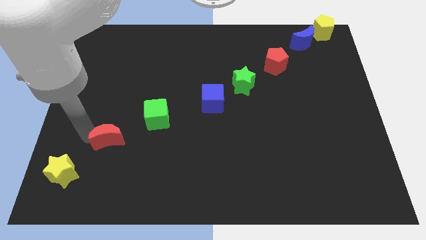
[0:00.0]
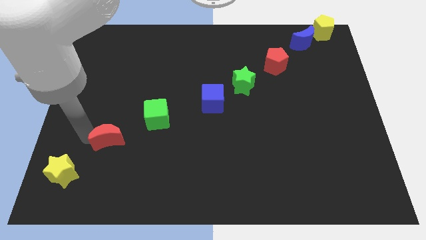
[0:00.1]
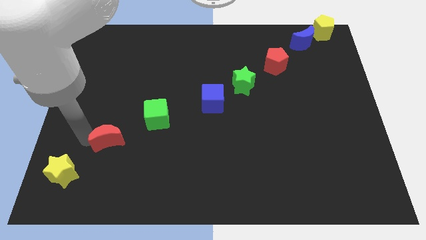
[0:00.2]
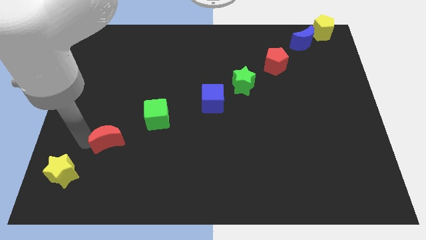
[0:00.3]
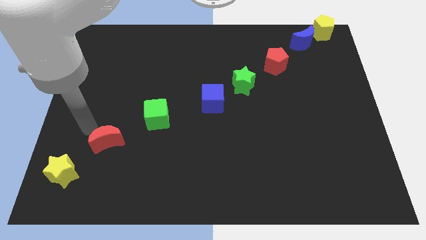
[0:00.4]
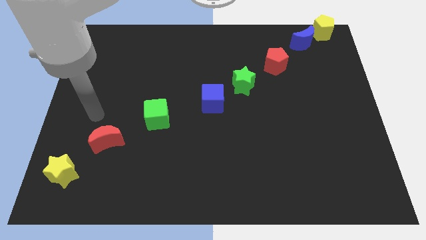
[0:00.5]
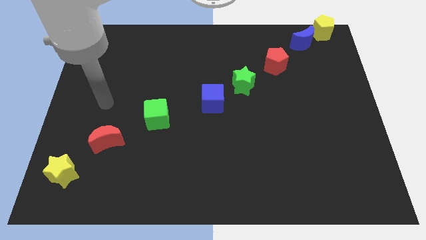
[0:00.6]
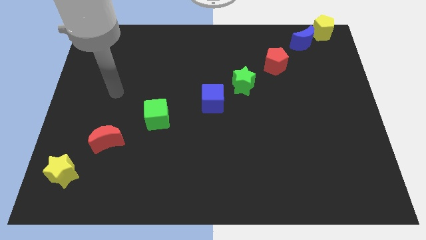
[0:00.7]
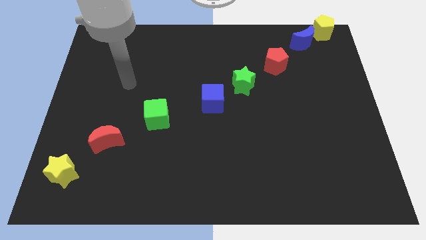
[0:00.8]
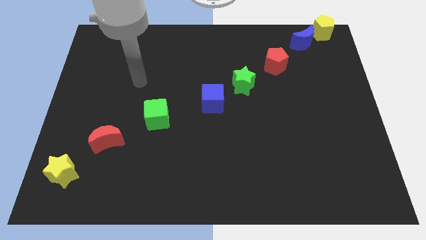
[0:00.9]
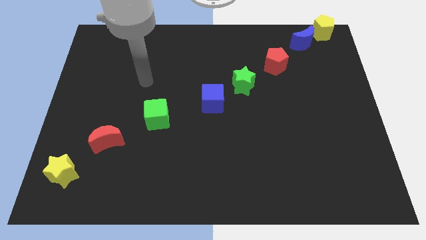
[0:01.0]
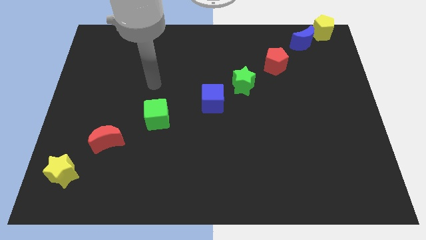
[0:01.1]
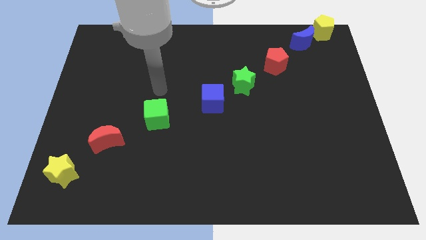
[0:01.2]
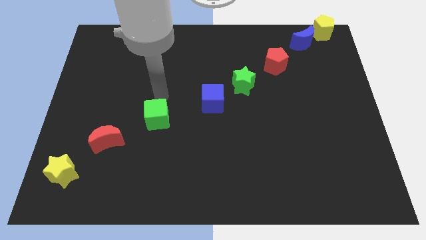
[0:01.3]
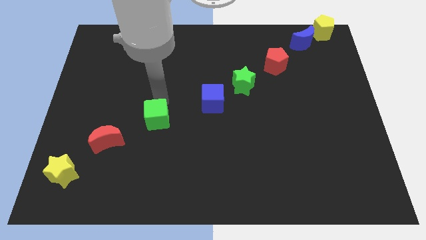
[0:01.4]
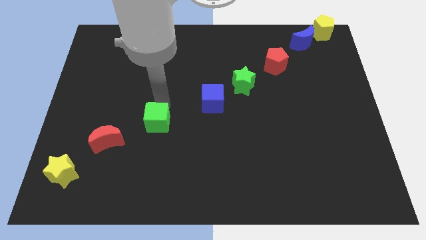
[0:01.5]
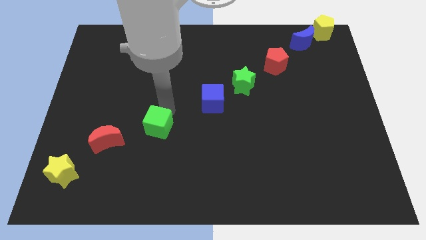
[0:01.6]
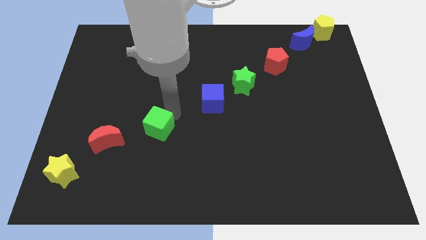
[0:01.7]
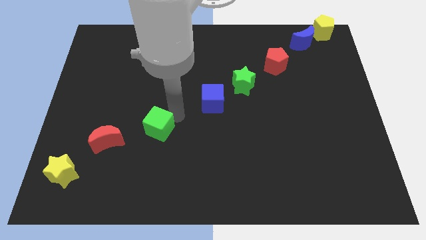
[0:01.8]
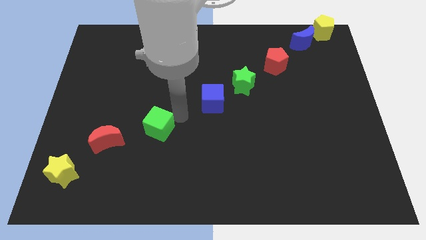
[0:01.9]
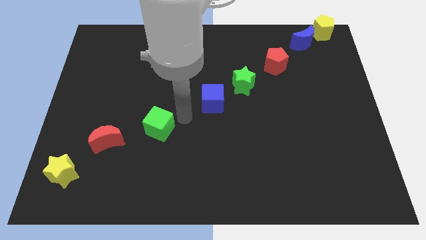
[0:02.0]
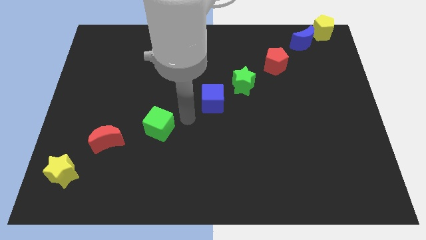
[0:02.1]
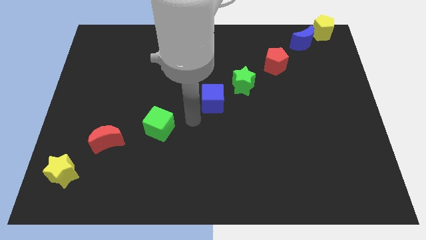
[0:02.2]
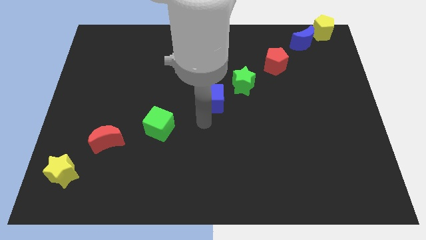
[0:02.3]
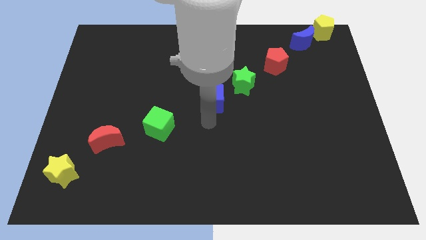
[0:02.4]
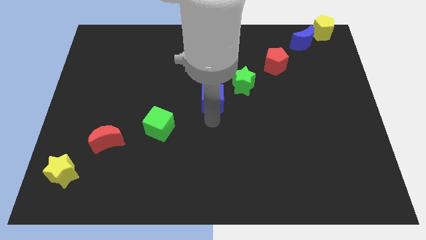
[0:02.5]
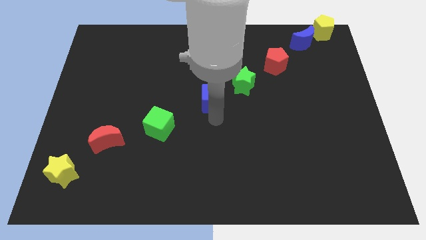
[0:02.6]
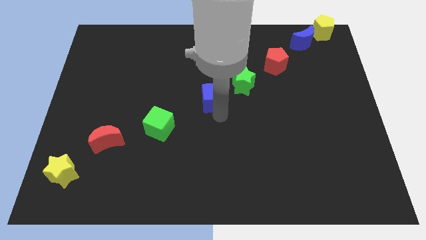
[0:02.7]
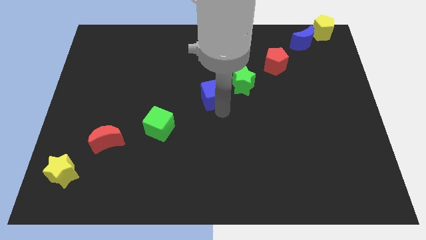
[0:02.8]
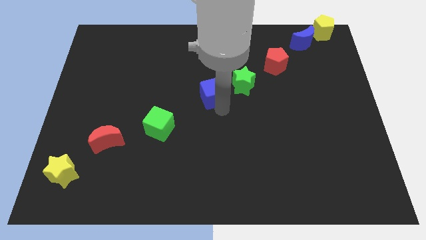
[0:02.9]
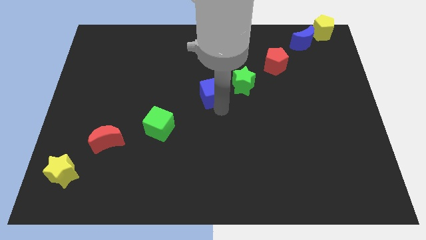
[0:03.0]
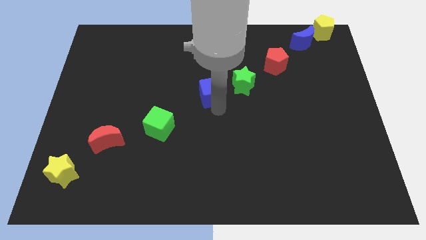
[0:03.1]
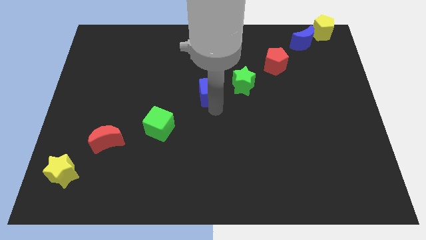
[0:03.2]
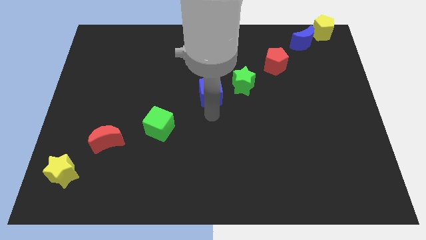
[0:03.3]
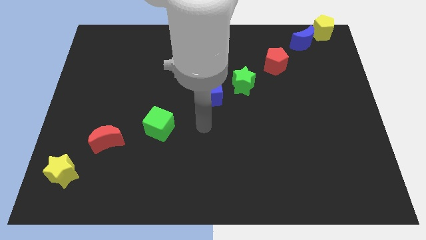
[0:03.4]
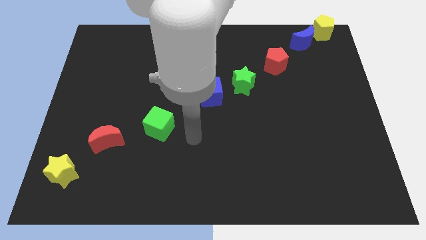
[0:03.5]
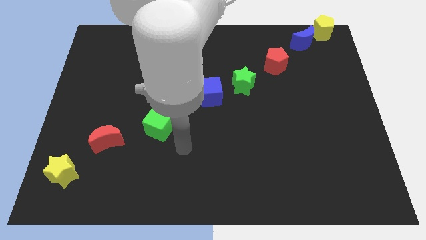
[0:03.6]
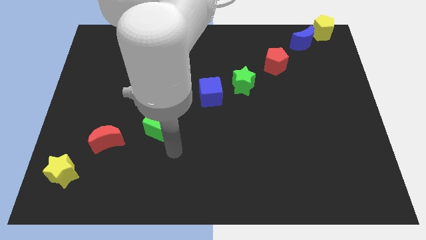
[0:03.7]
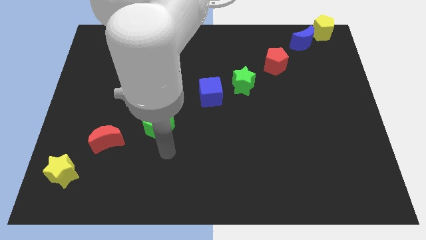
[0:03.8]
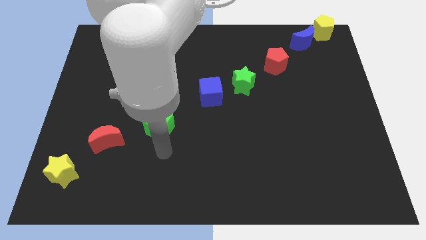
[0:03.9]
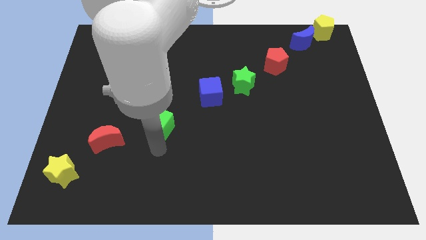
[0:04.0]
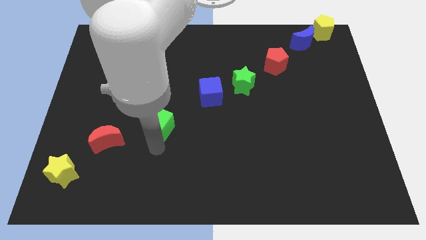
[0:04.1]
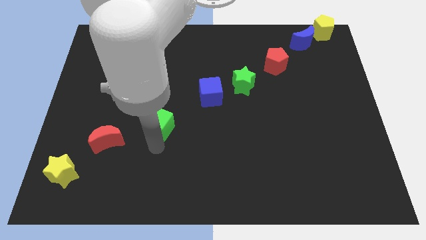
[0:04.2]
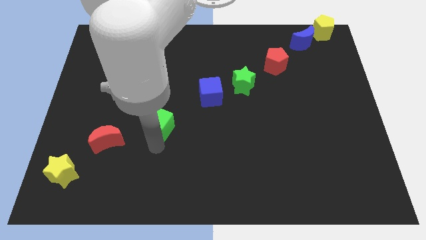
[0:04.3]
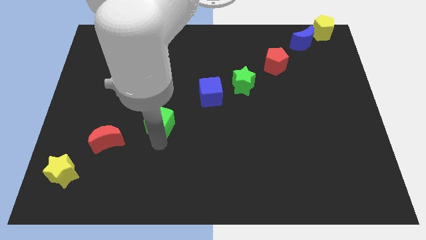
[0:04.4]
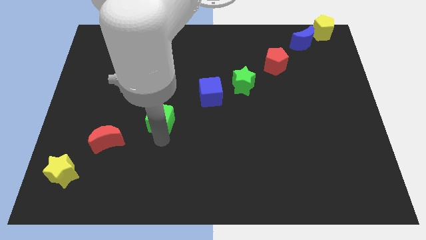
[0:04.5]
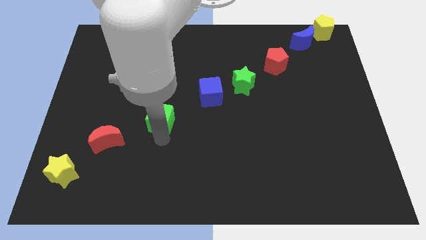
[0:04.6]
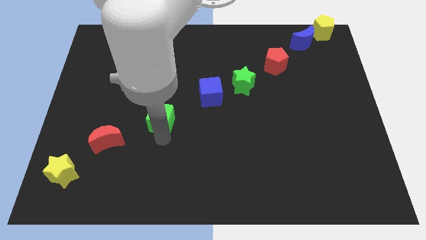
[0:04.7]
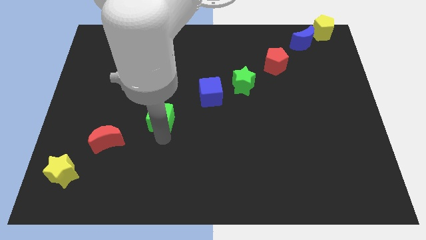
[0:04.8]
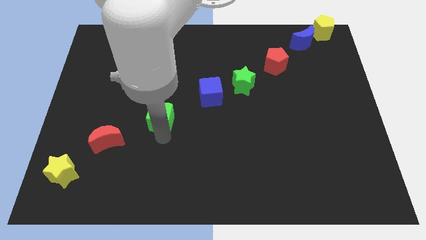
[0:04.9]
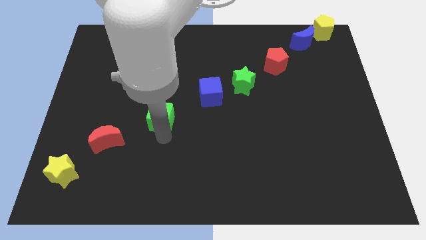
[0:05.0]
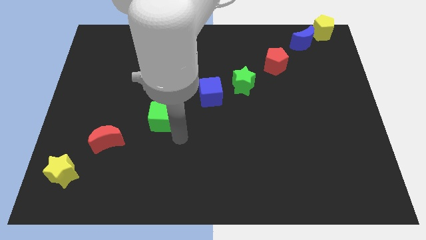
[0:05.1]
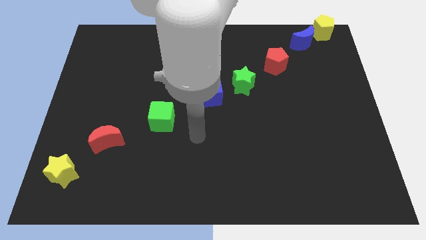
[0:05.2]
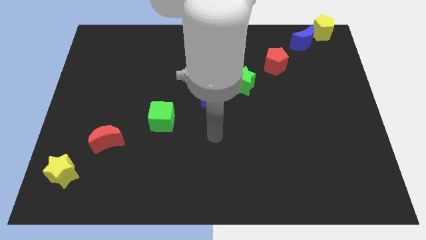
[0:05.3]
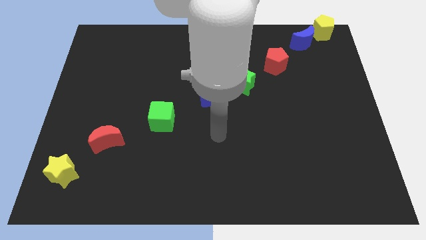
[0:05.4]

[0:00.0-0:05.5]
slightly push blue cube and green cube diagonal each other

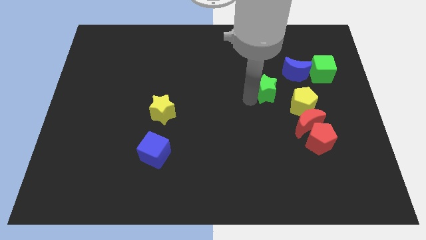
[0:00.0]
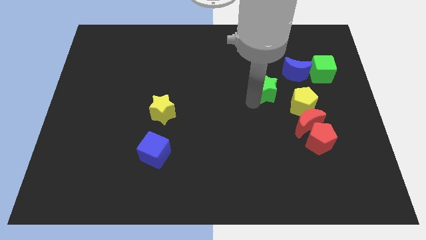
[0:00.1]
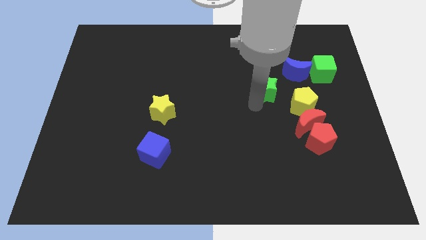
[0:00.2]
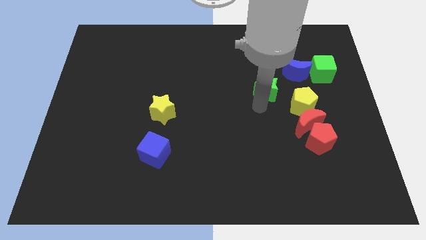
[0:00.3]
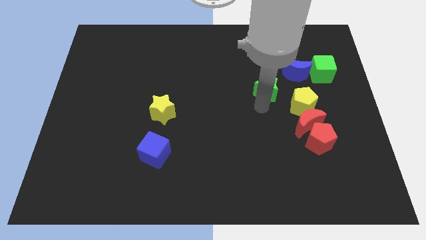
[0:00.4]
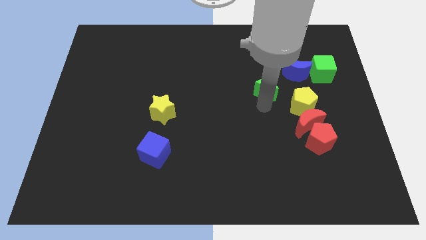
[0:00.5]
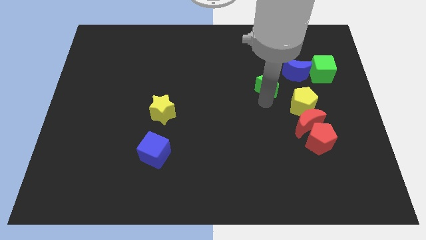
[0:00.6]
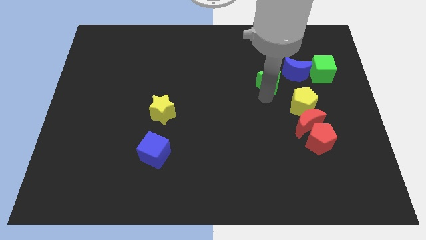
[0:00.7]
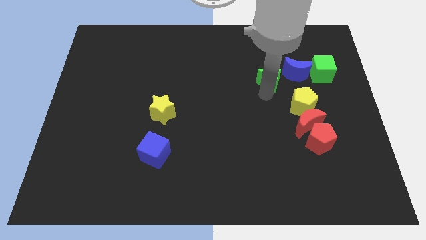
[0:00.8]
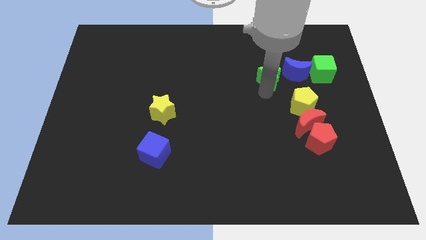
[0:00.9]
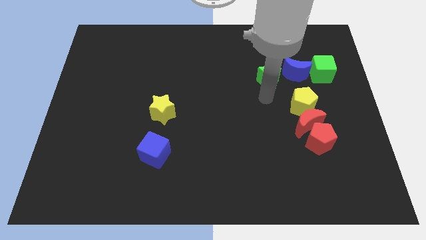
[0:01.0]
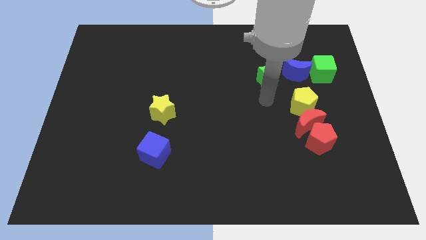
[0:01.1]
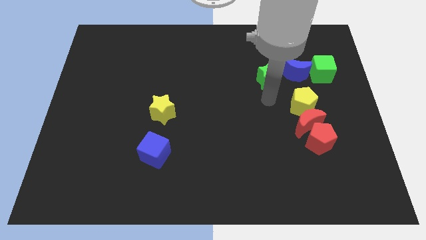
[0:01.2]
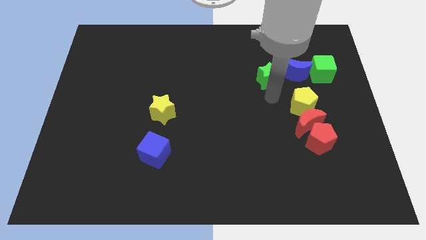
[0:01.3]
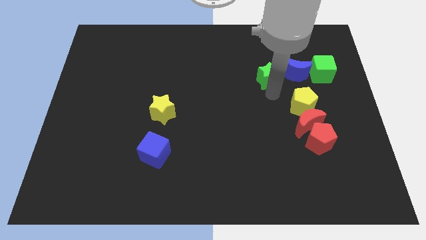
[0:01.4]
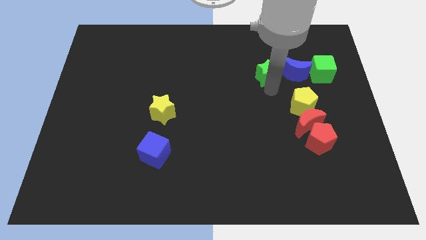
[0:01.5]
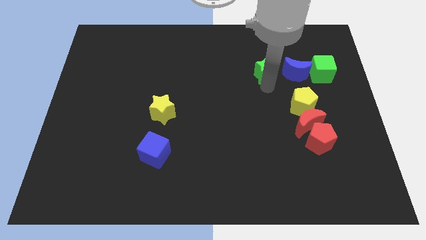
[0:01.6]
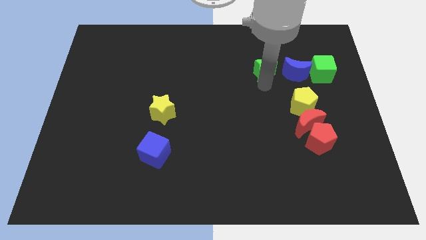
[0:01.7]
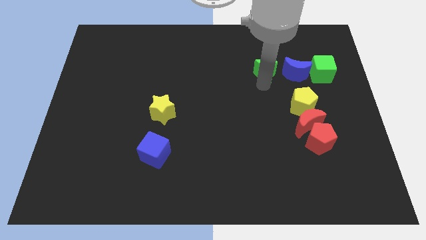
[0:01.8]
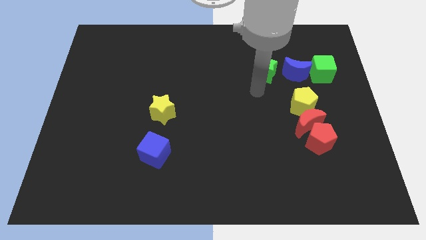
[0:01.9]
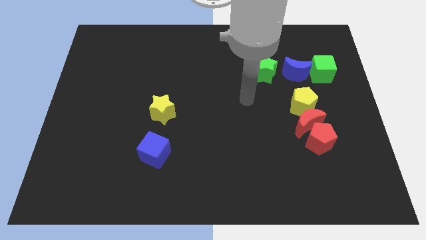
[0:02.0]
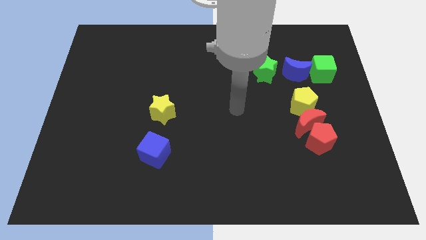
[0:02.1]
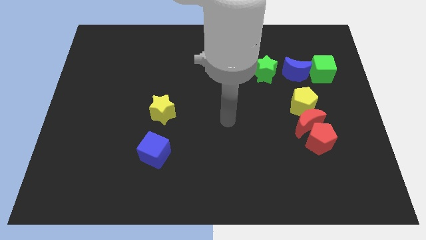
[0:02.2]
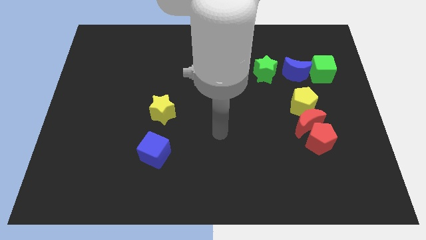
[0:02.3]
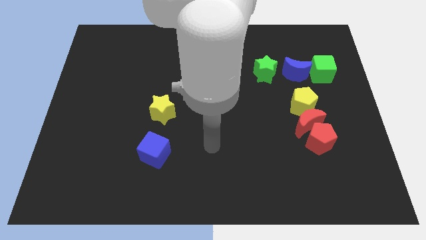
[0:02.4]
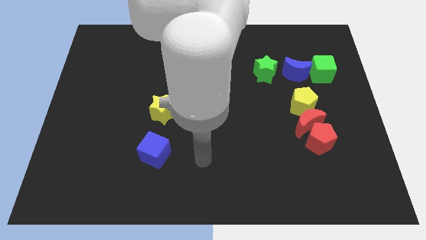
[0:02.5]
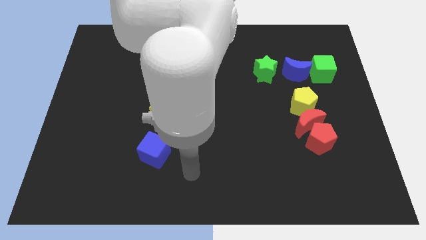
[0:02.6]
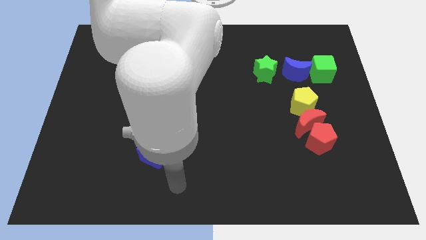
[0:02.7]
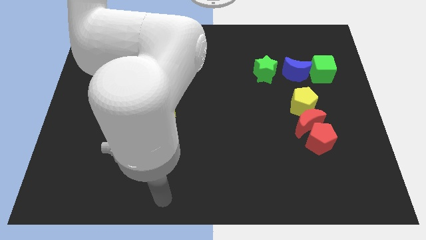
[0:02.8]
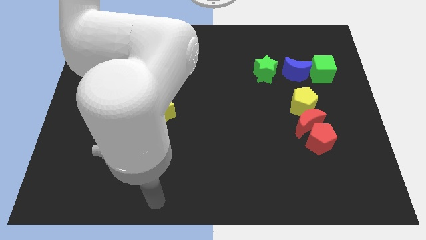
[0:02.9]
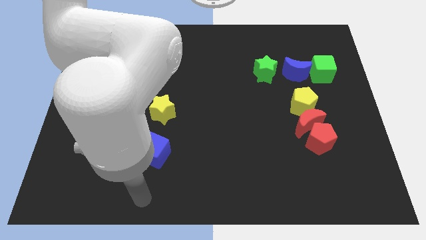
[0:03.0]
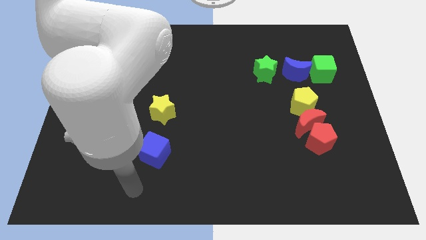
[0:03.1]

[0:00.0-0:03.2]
move the green star to the left side of the blue moon

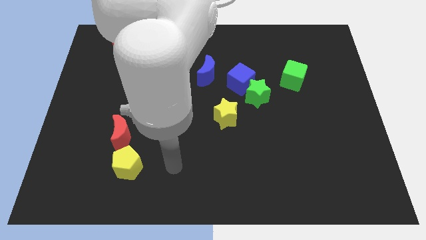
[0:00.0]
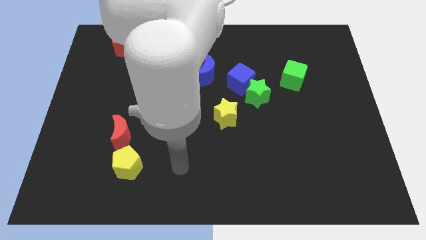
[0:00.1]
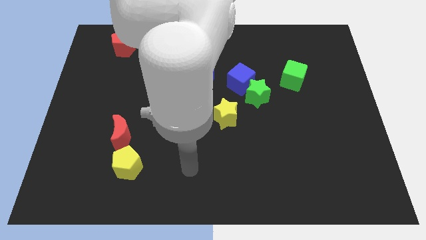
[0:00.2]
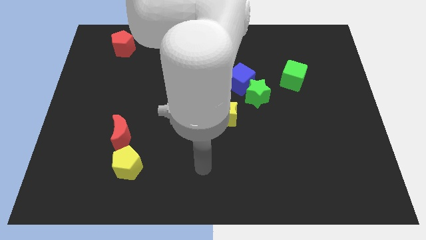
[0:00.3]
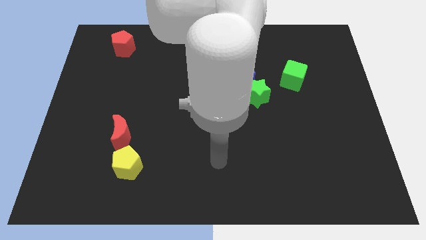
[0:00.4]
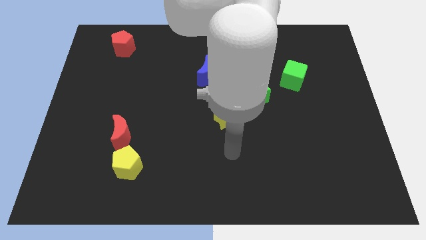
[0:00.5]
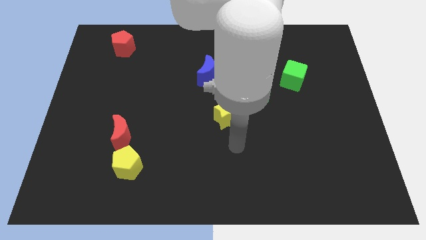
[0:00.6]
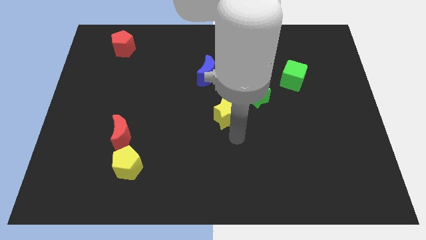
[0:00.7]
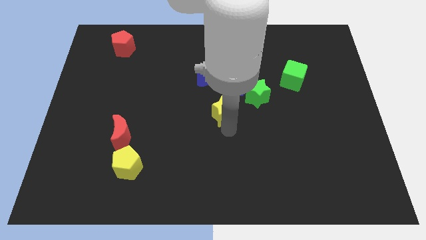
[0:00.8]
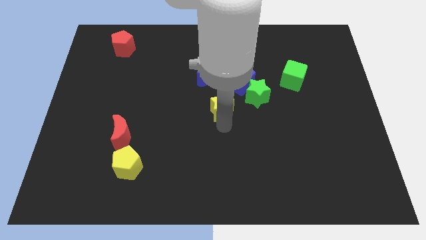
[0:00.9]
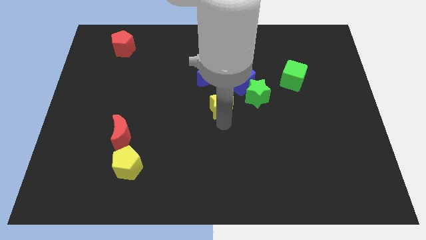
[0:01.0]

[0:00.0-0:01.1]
touch the yellow star
